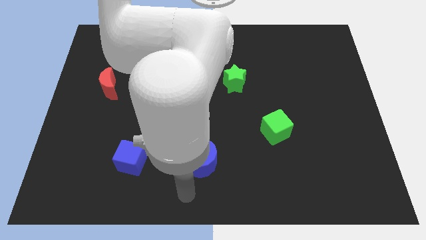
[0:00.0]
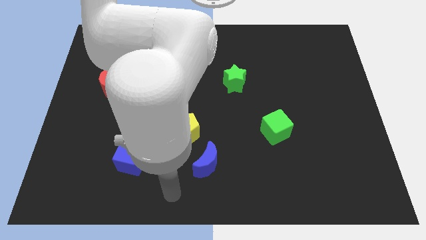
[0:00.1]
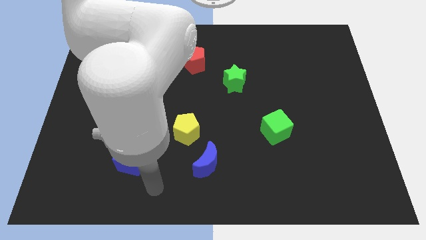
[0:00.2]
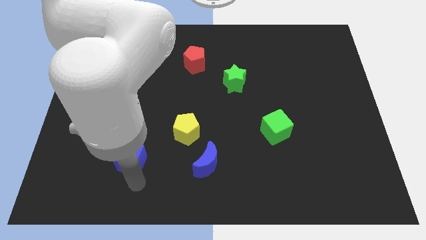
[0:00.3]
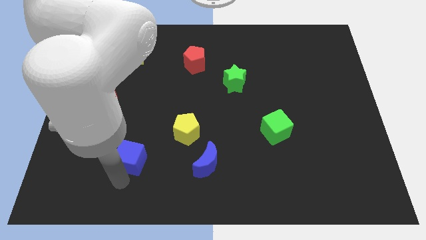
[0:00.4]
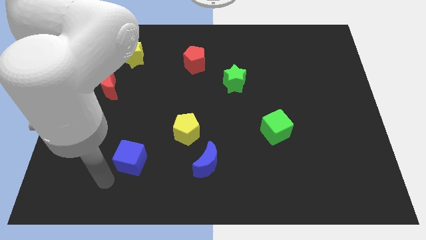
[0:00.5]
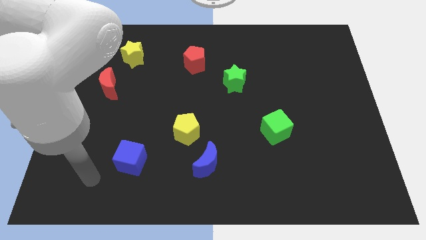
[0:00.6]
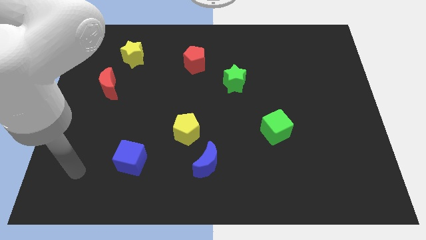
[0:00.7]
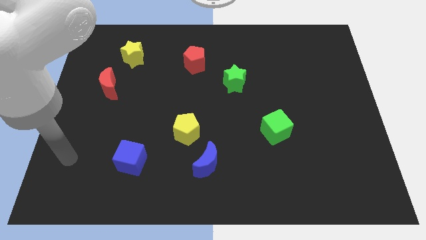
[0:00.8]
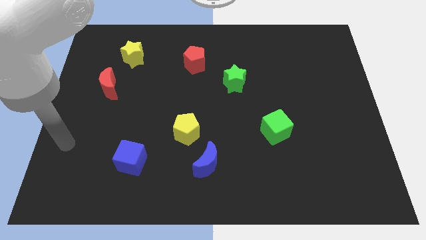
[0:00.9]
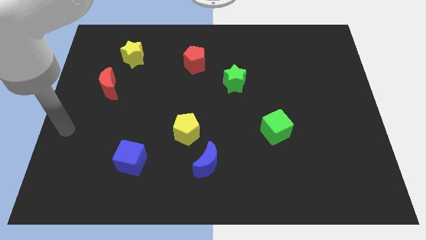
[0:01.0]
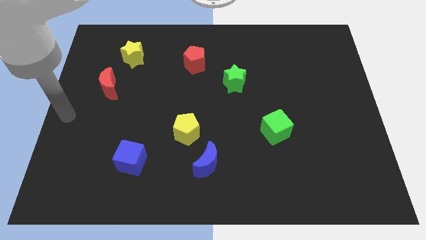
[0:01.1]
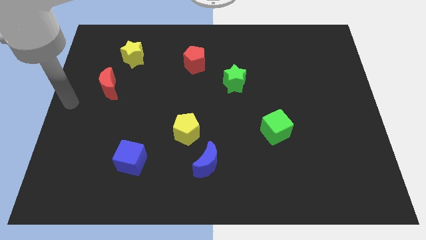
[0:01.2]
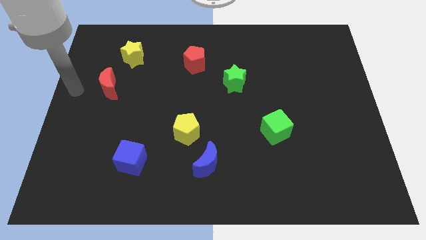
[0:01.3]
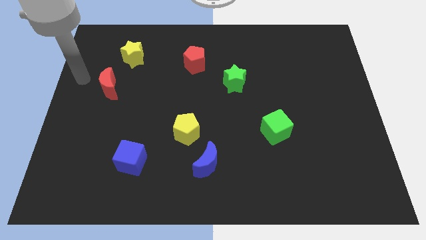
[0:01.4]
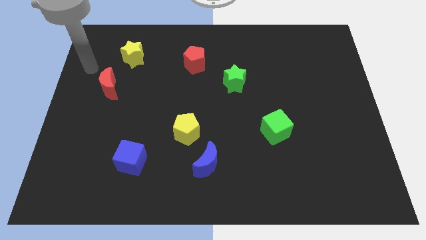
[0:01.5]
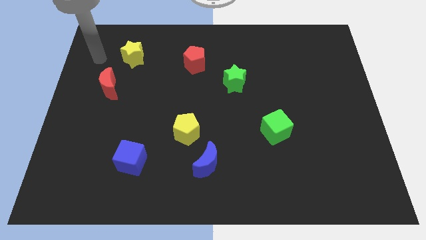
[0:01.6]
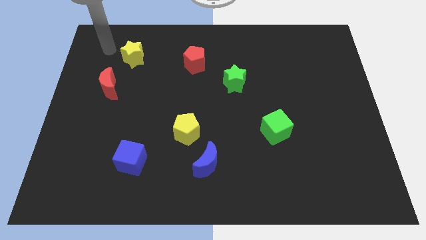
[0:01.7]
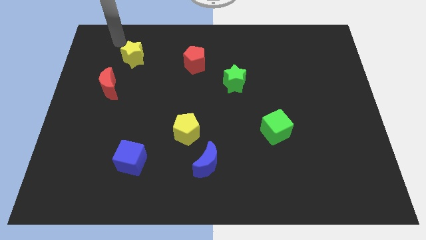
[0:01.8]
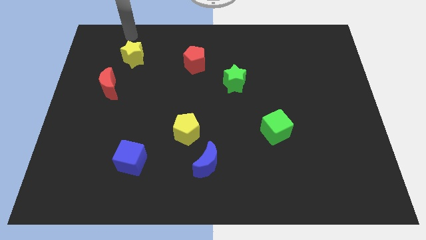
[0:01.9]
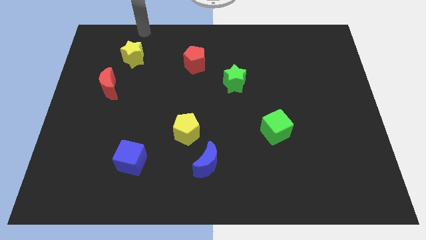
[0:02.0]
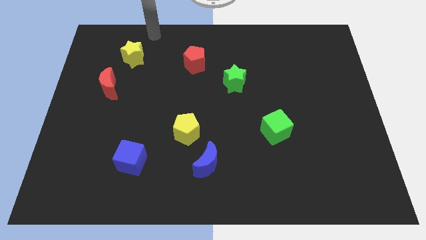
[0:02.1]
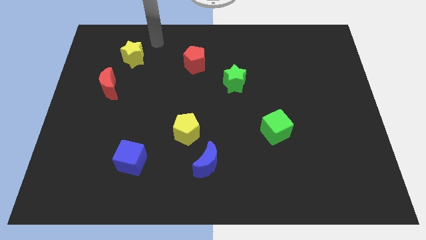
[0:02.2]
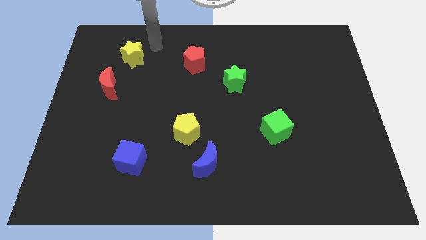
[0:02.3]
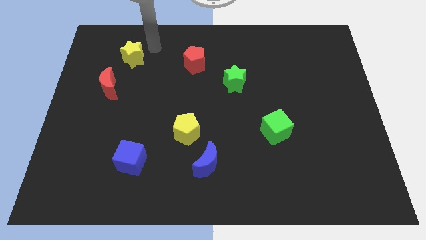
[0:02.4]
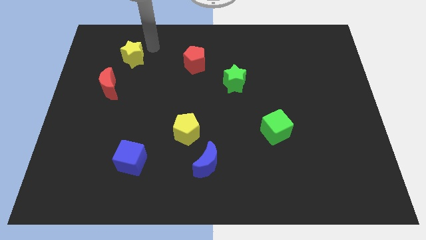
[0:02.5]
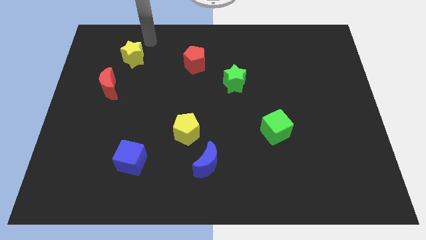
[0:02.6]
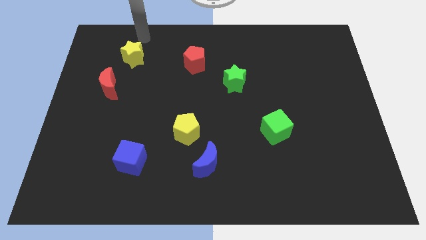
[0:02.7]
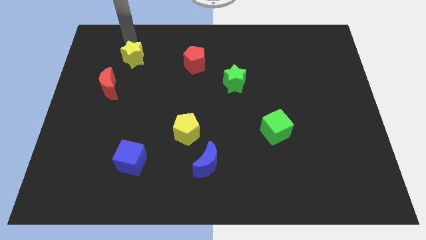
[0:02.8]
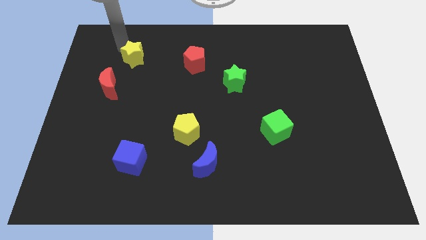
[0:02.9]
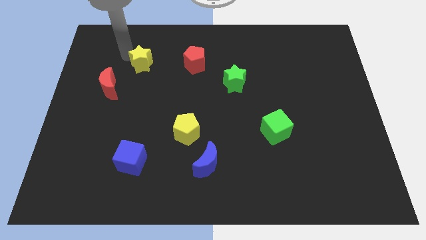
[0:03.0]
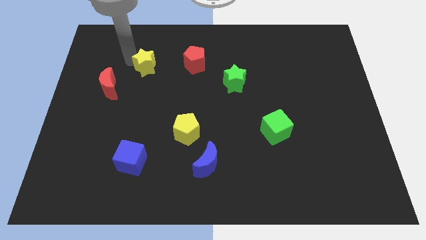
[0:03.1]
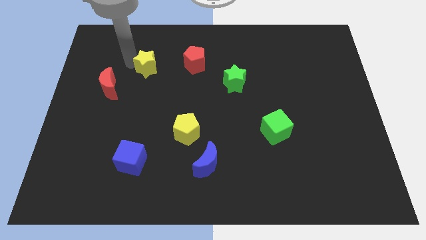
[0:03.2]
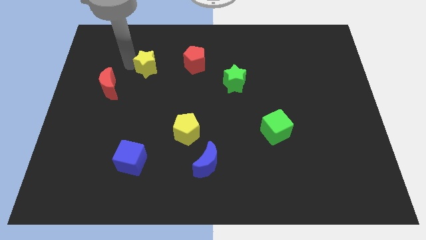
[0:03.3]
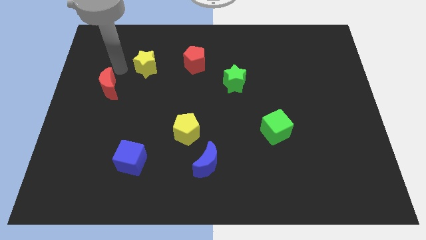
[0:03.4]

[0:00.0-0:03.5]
move the yellow star between the red pentagon and the red moon

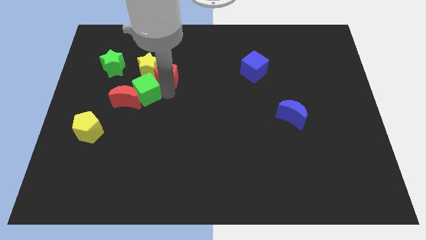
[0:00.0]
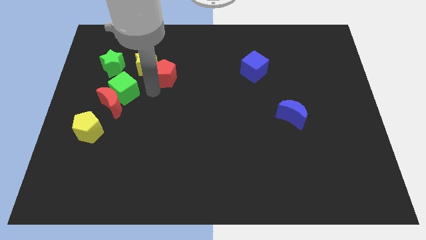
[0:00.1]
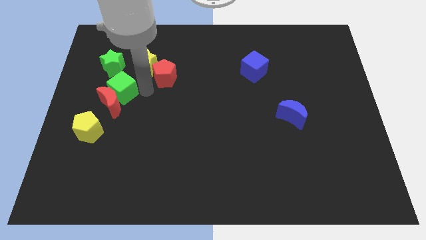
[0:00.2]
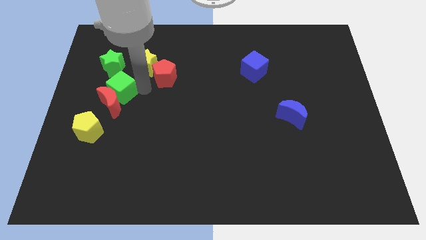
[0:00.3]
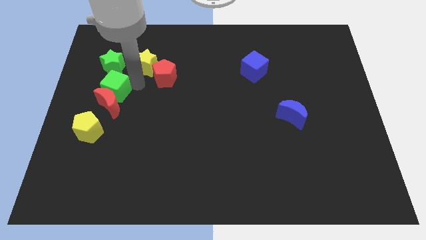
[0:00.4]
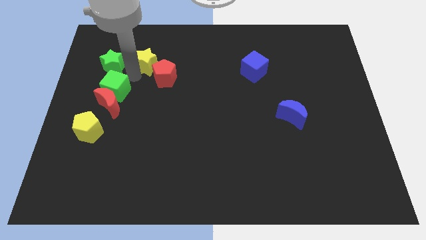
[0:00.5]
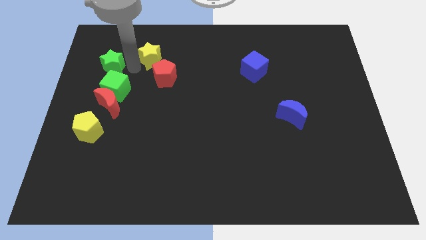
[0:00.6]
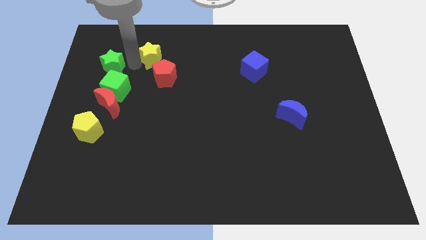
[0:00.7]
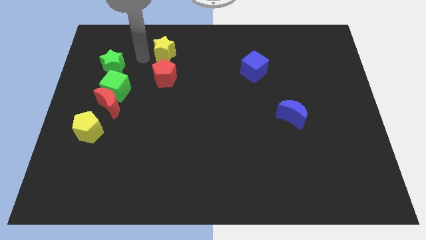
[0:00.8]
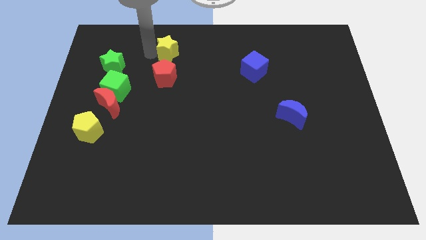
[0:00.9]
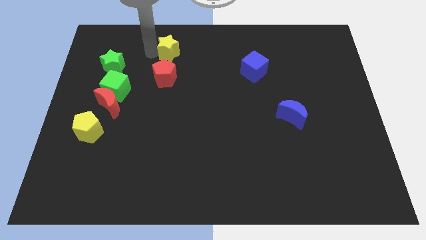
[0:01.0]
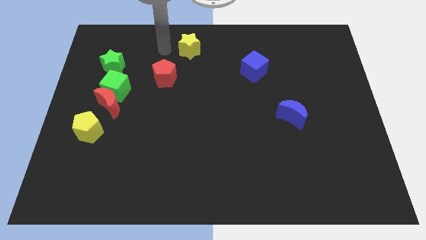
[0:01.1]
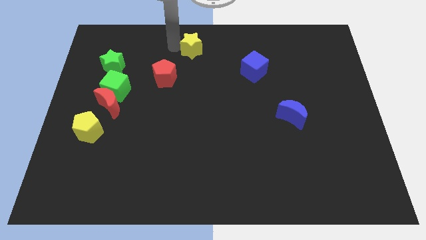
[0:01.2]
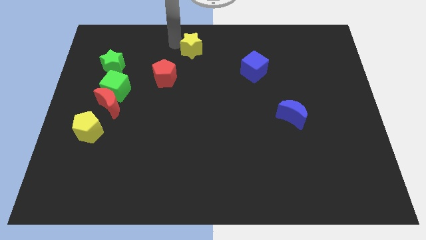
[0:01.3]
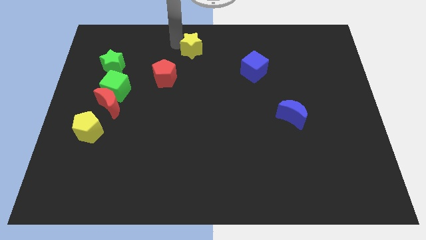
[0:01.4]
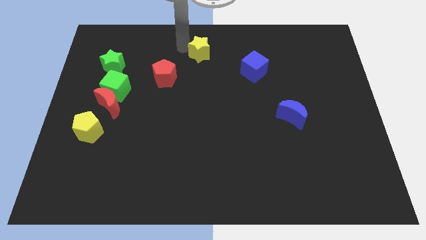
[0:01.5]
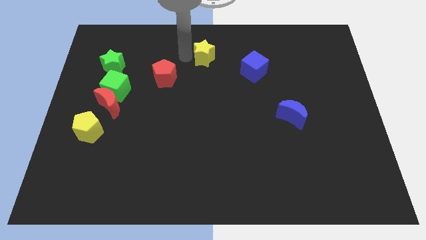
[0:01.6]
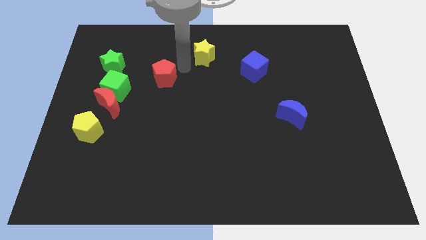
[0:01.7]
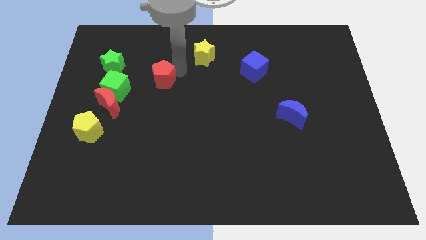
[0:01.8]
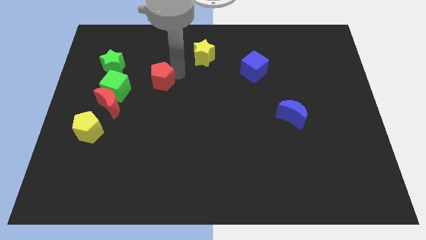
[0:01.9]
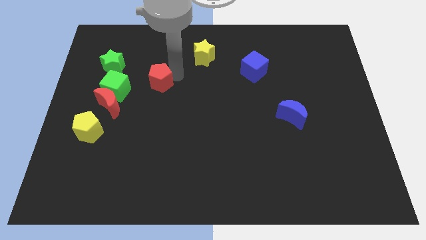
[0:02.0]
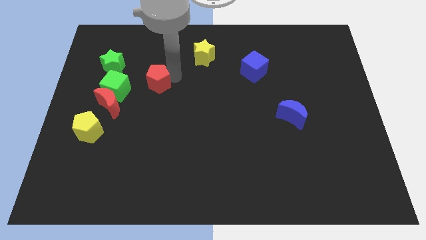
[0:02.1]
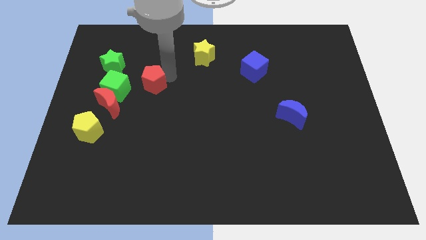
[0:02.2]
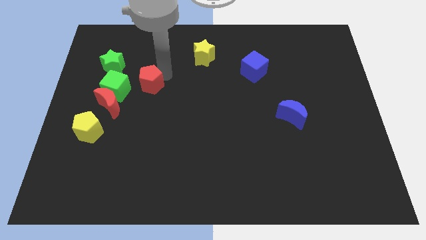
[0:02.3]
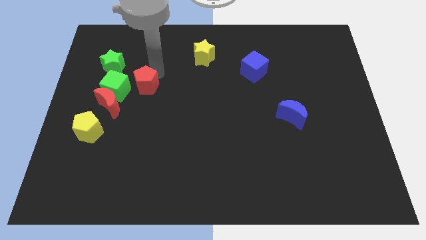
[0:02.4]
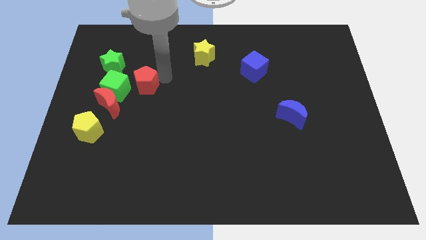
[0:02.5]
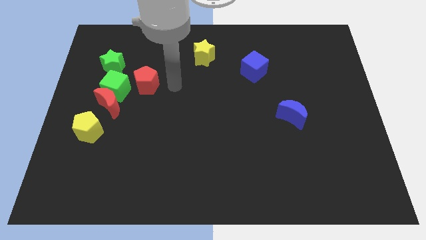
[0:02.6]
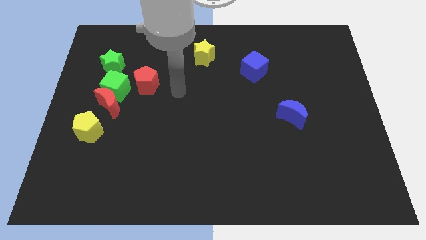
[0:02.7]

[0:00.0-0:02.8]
move the red pentagon towards the right side of the green block

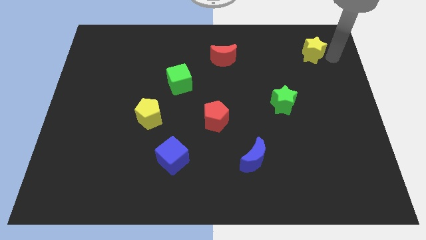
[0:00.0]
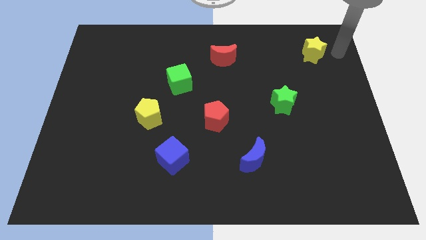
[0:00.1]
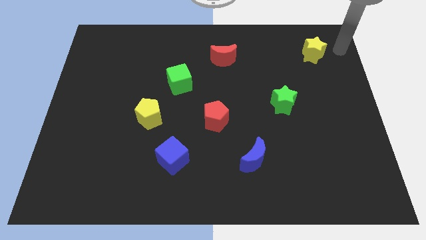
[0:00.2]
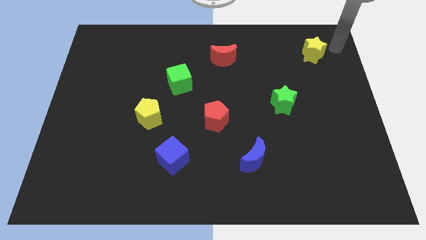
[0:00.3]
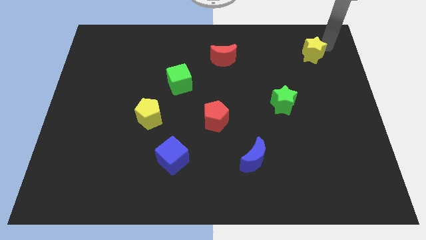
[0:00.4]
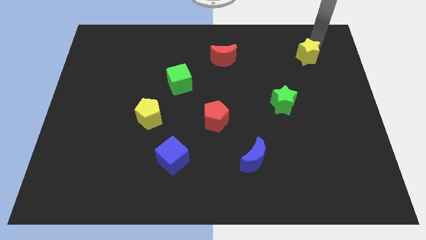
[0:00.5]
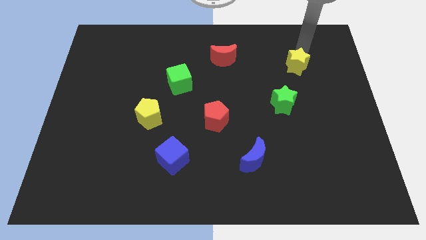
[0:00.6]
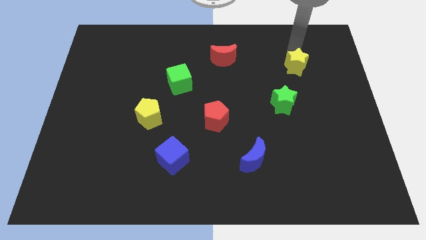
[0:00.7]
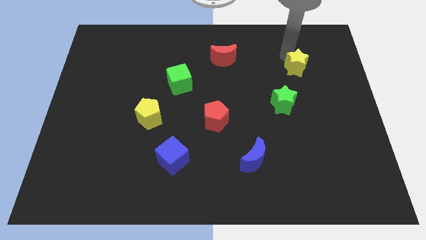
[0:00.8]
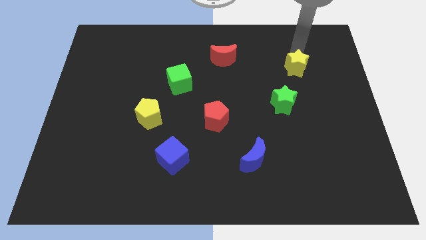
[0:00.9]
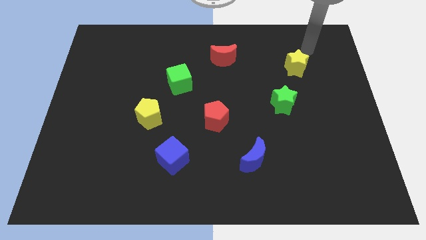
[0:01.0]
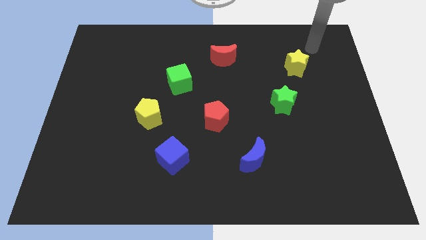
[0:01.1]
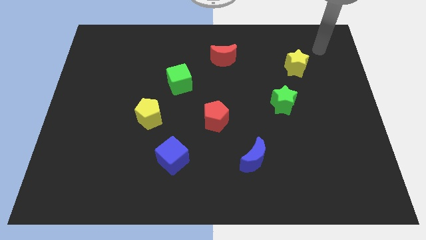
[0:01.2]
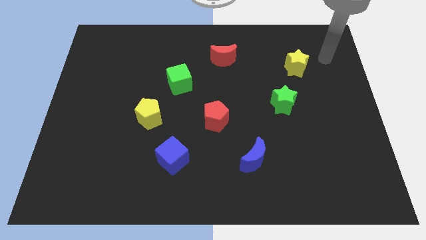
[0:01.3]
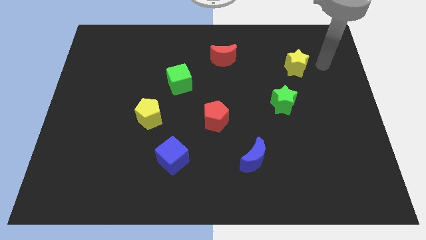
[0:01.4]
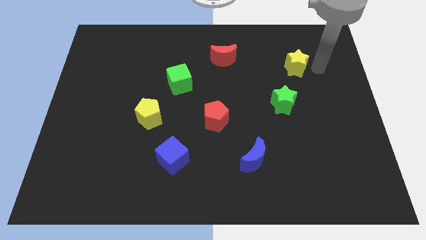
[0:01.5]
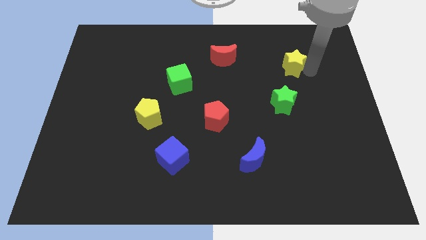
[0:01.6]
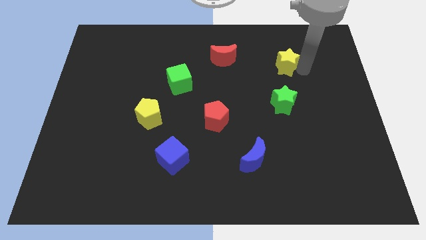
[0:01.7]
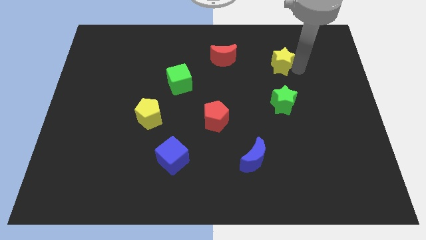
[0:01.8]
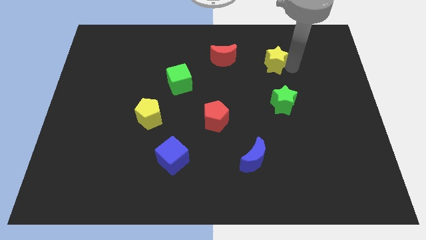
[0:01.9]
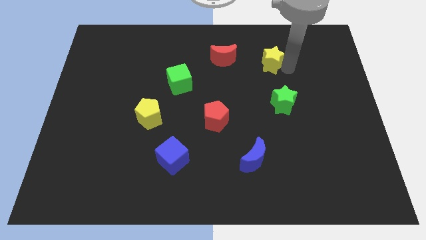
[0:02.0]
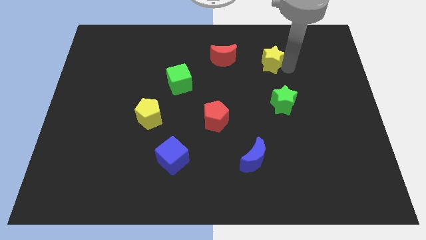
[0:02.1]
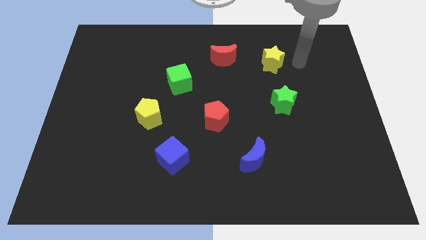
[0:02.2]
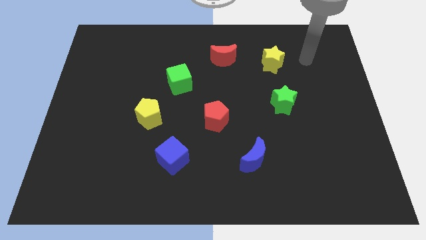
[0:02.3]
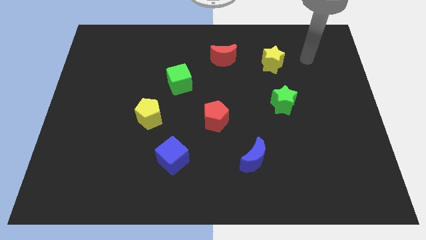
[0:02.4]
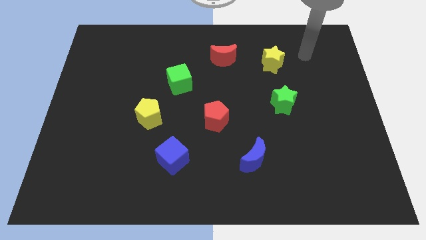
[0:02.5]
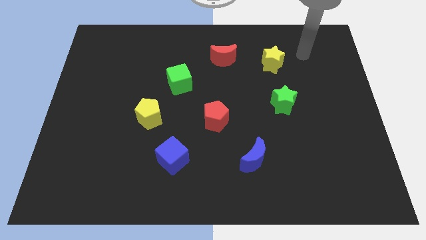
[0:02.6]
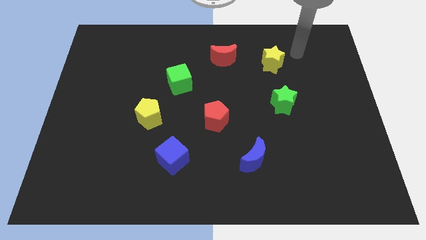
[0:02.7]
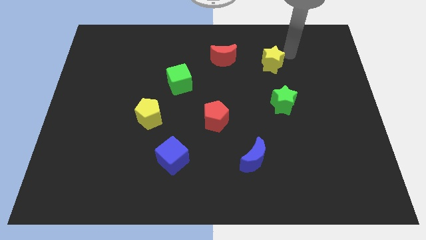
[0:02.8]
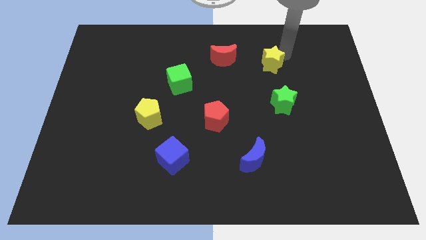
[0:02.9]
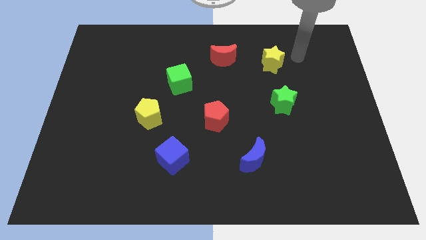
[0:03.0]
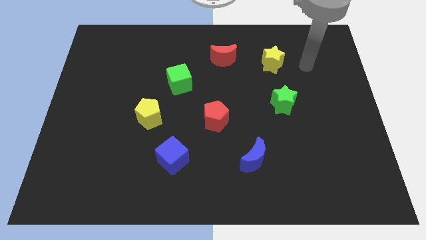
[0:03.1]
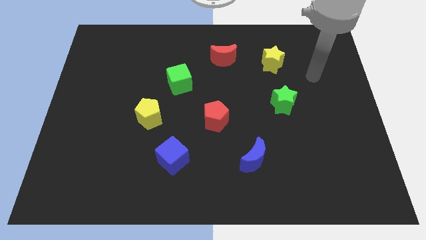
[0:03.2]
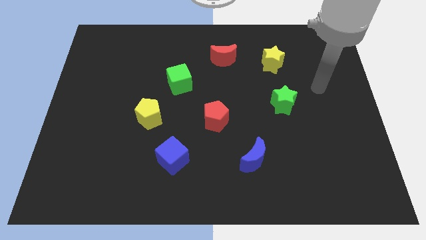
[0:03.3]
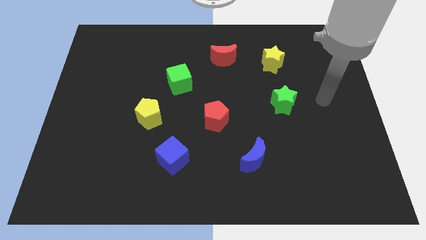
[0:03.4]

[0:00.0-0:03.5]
put the yellow star vertically above the green star
